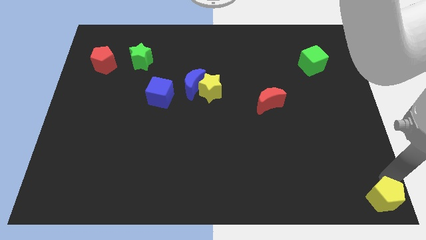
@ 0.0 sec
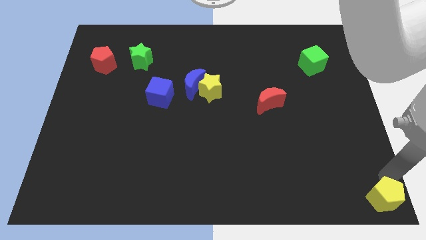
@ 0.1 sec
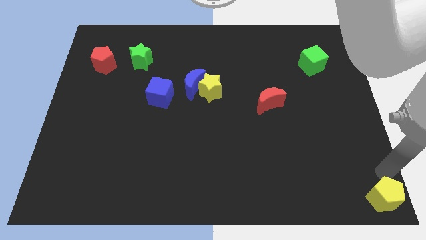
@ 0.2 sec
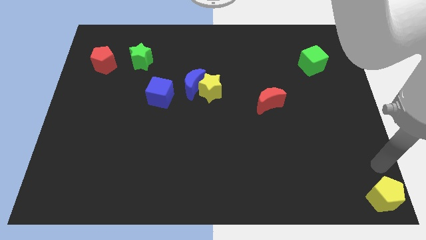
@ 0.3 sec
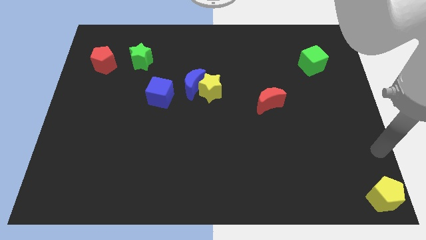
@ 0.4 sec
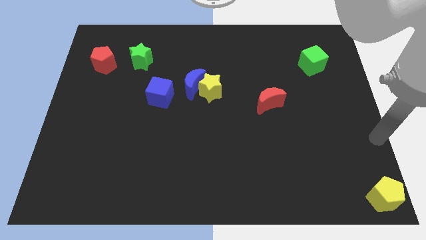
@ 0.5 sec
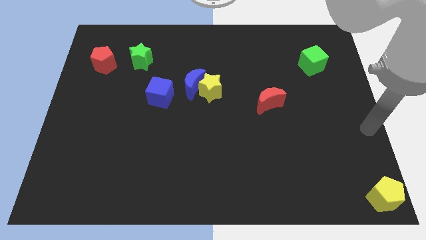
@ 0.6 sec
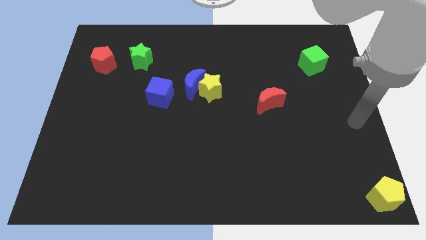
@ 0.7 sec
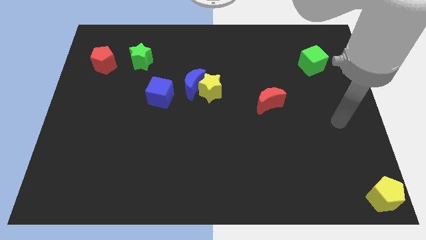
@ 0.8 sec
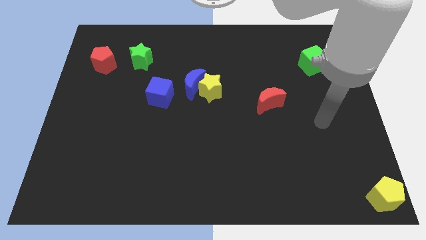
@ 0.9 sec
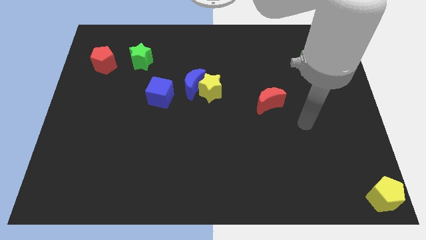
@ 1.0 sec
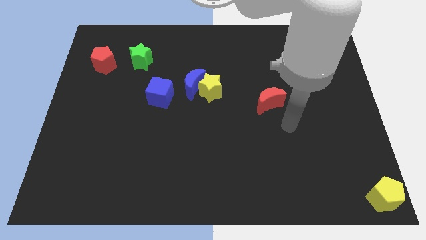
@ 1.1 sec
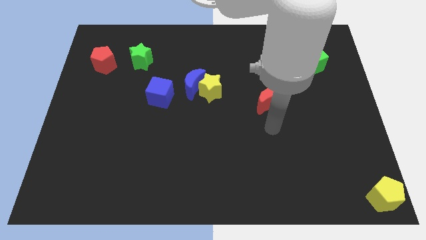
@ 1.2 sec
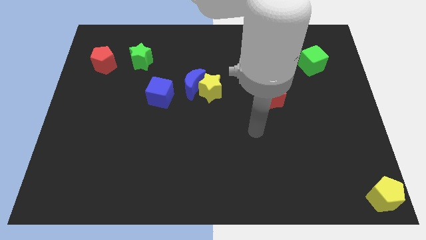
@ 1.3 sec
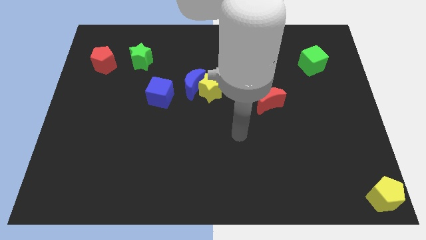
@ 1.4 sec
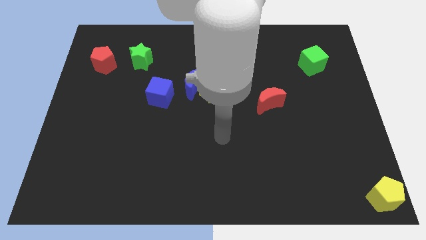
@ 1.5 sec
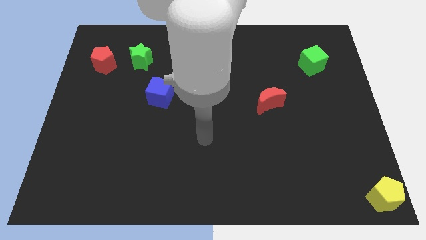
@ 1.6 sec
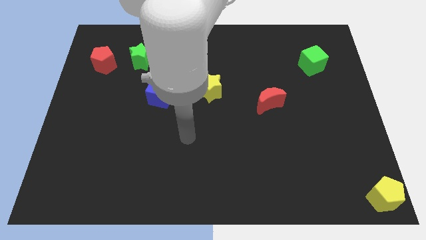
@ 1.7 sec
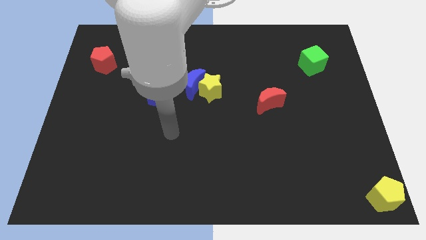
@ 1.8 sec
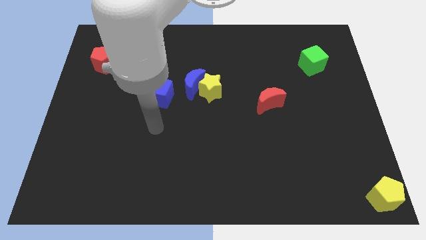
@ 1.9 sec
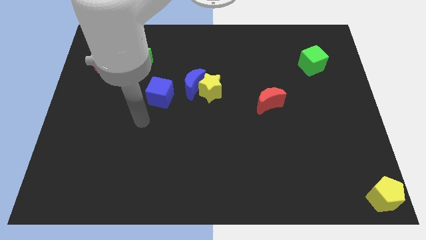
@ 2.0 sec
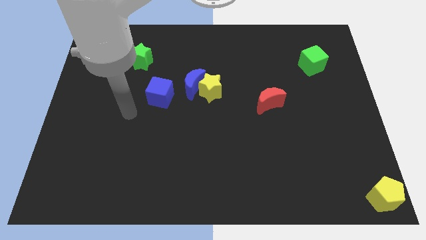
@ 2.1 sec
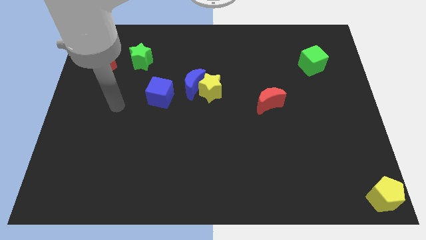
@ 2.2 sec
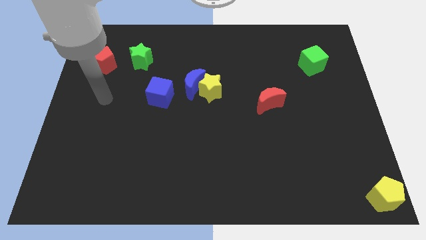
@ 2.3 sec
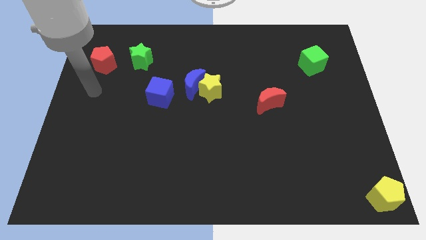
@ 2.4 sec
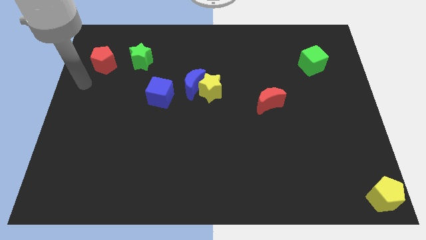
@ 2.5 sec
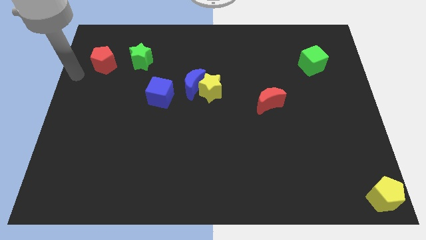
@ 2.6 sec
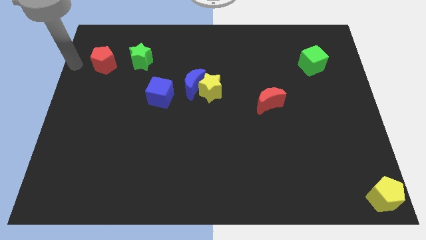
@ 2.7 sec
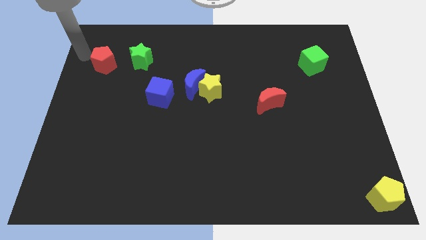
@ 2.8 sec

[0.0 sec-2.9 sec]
move your arm left to the red pentagon

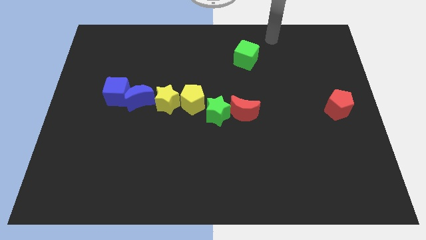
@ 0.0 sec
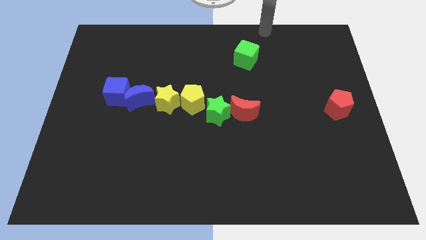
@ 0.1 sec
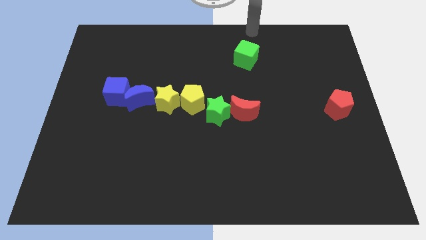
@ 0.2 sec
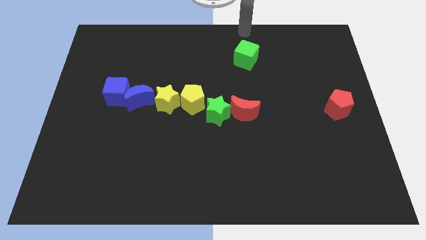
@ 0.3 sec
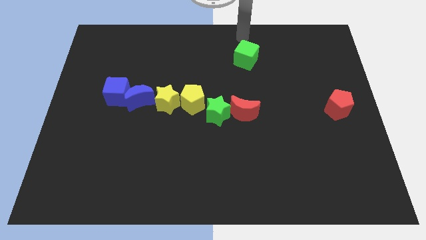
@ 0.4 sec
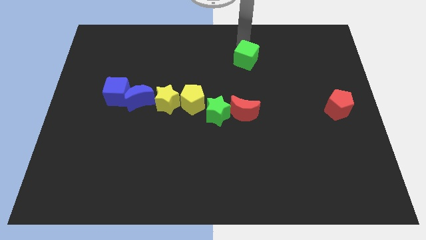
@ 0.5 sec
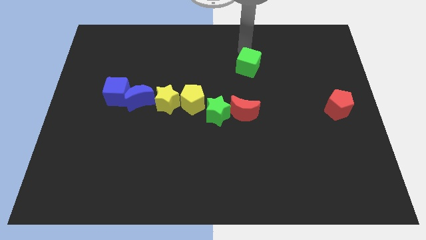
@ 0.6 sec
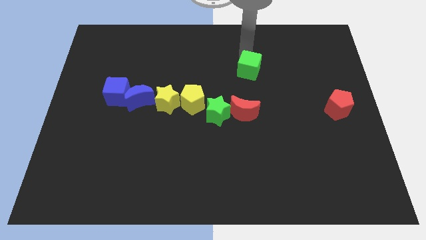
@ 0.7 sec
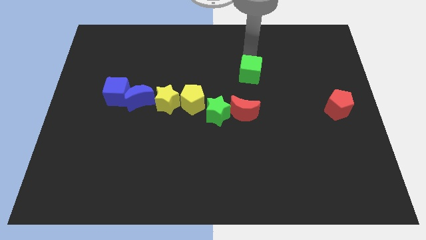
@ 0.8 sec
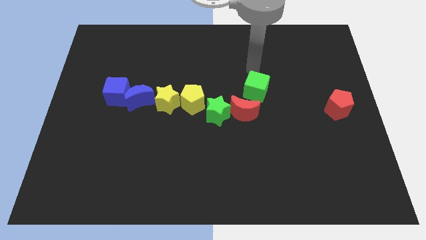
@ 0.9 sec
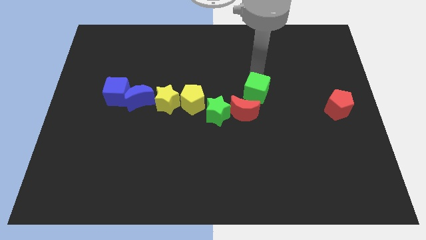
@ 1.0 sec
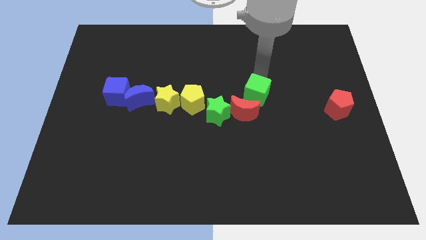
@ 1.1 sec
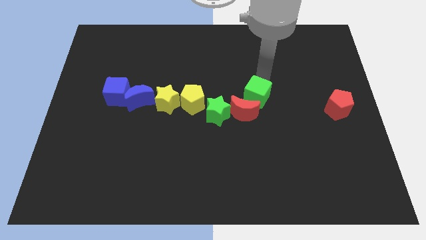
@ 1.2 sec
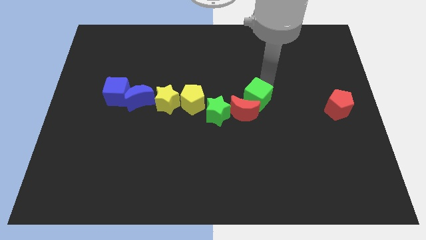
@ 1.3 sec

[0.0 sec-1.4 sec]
push the green cube into red crescent

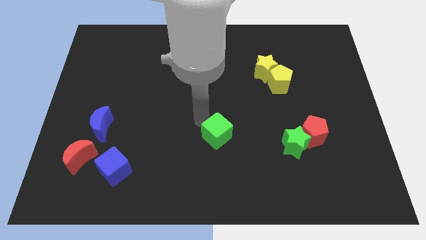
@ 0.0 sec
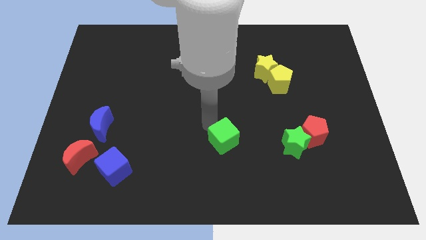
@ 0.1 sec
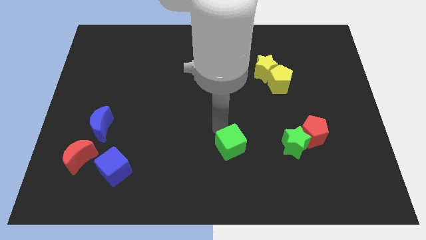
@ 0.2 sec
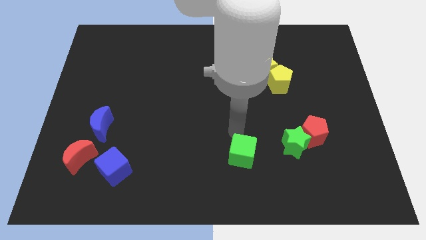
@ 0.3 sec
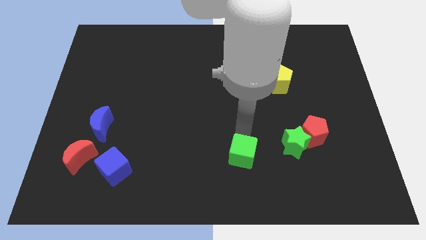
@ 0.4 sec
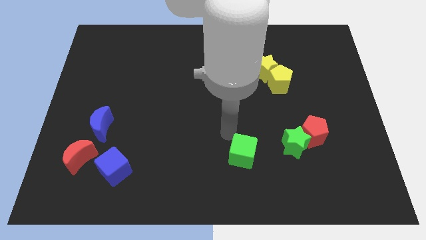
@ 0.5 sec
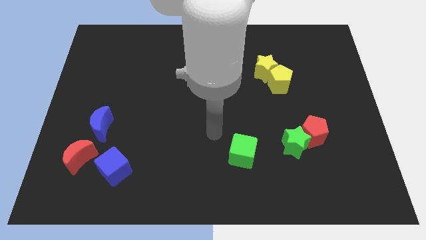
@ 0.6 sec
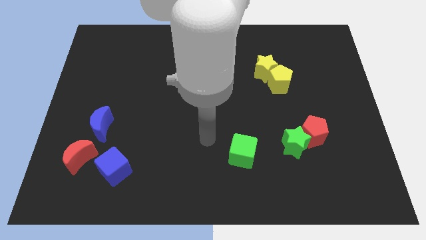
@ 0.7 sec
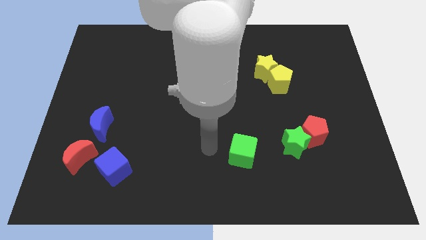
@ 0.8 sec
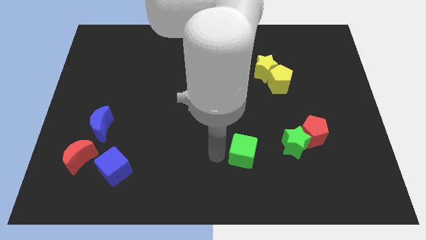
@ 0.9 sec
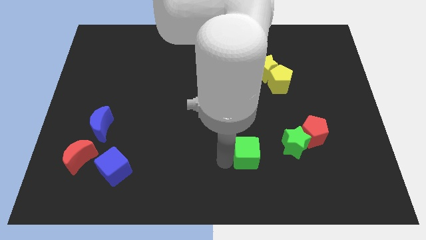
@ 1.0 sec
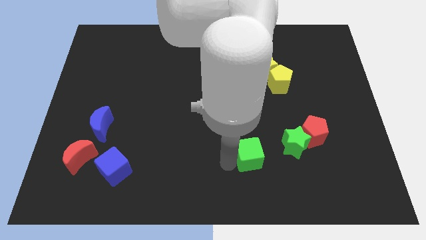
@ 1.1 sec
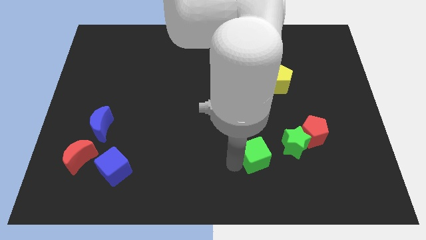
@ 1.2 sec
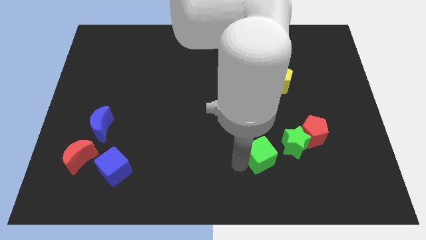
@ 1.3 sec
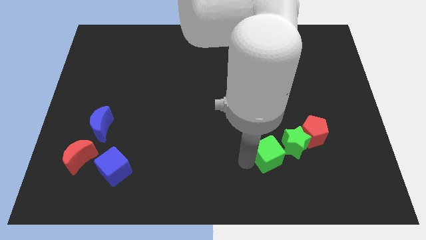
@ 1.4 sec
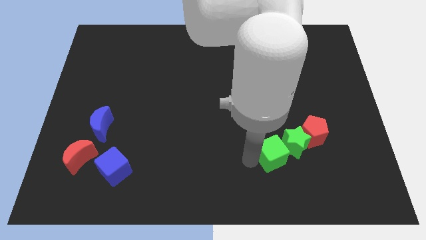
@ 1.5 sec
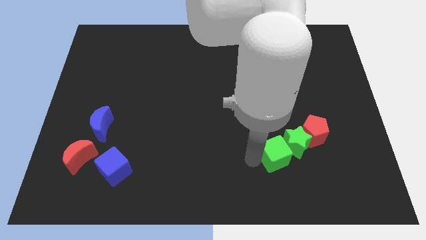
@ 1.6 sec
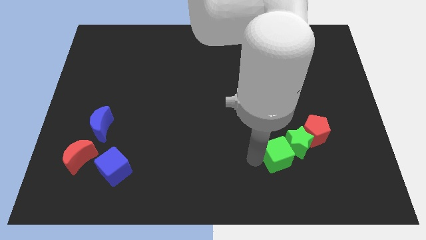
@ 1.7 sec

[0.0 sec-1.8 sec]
push the green cube into green star

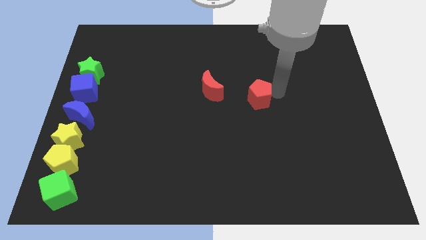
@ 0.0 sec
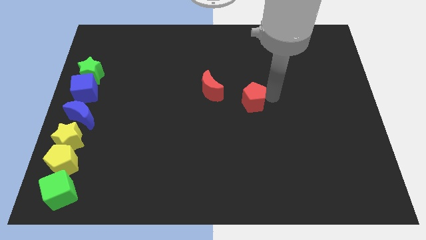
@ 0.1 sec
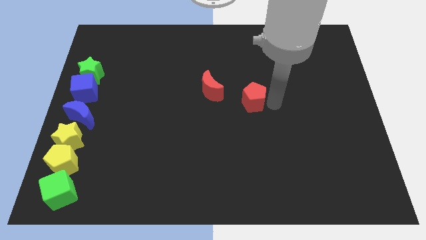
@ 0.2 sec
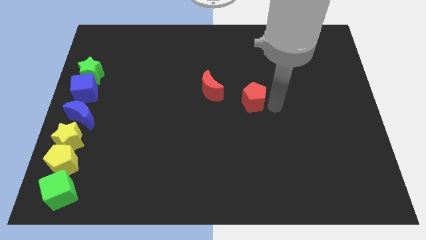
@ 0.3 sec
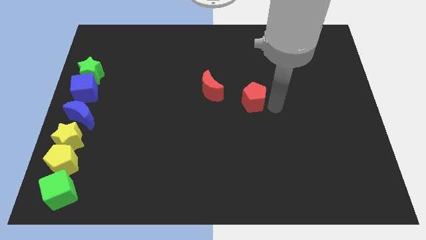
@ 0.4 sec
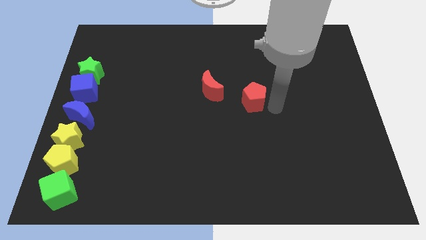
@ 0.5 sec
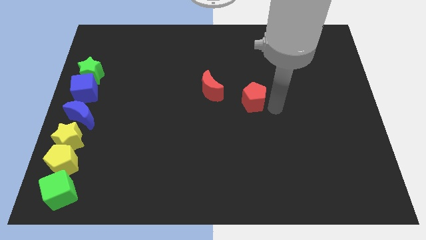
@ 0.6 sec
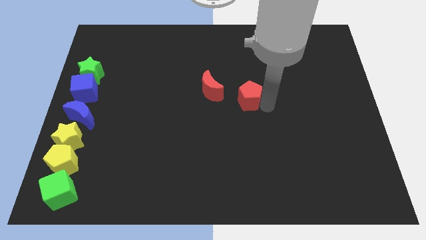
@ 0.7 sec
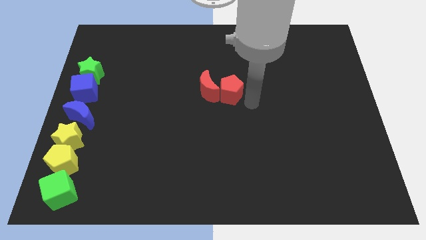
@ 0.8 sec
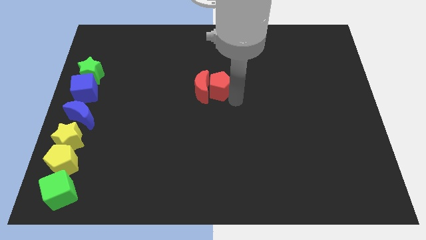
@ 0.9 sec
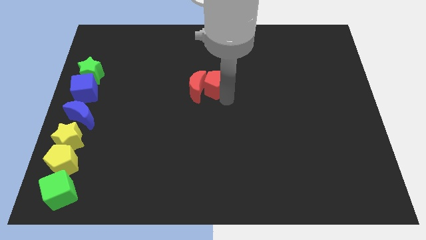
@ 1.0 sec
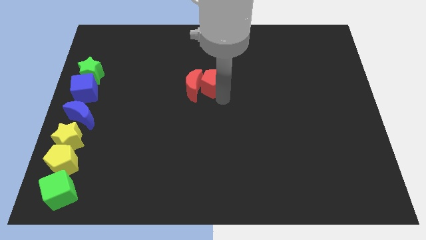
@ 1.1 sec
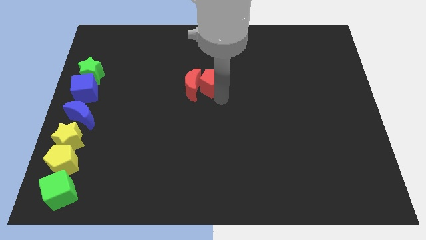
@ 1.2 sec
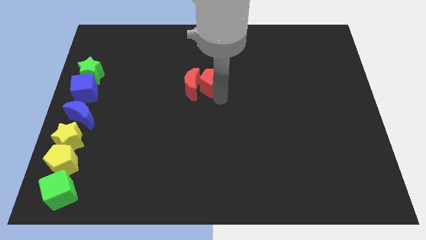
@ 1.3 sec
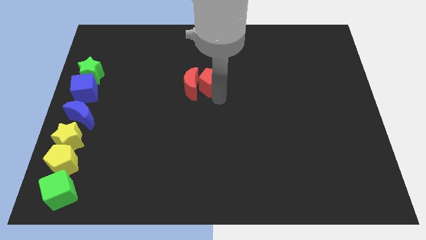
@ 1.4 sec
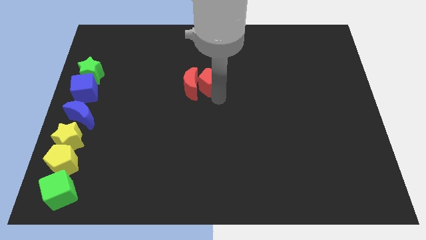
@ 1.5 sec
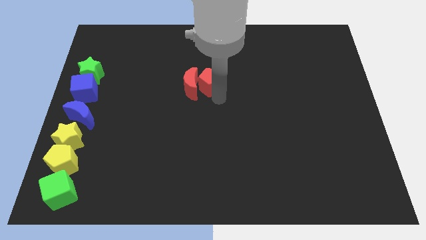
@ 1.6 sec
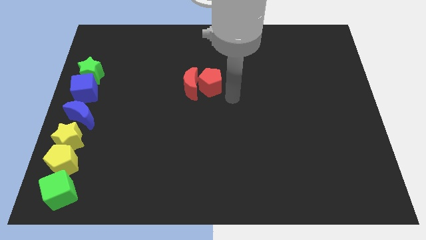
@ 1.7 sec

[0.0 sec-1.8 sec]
push the red pentagon into the red crescent

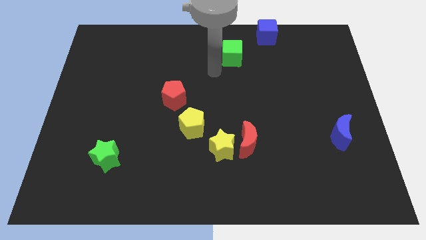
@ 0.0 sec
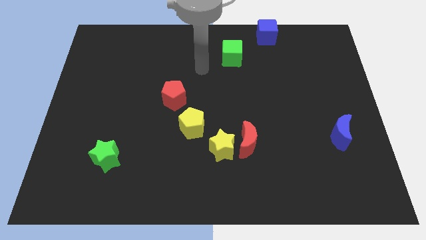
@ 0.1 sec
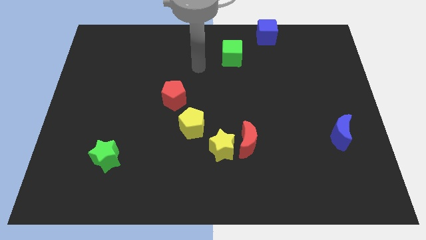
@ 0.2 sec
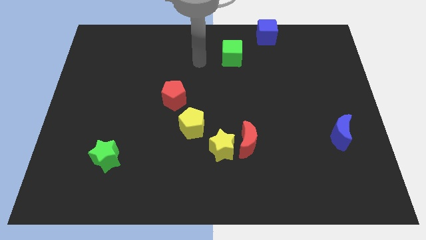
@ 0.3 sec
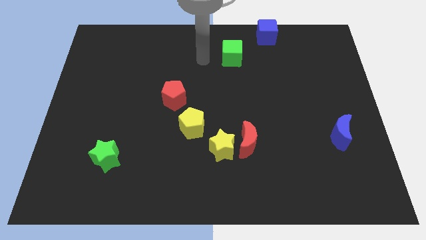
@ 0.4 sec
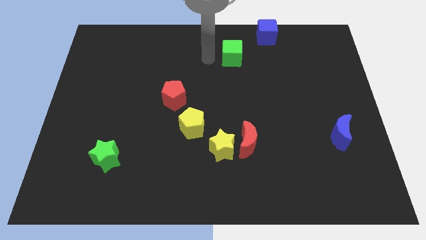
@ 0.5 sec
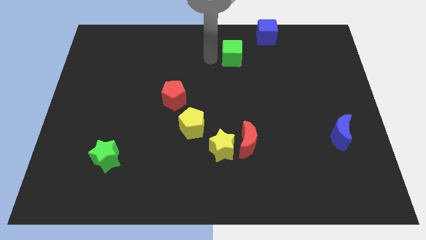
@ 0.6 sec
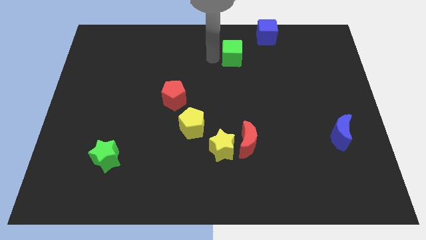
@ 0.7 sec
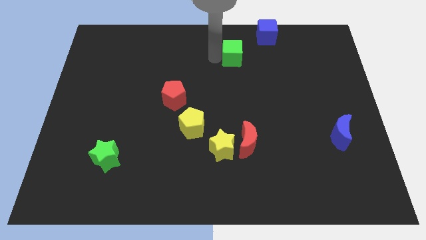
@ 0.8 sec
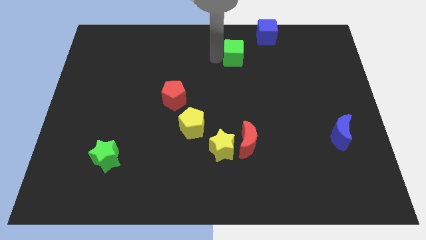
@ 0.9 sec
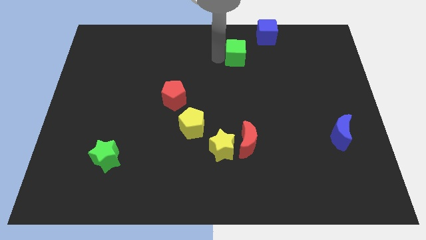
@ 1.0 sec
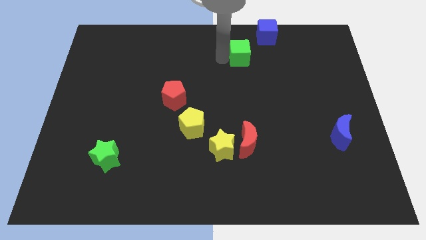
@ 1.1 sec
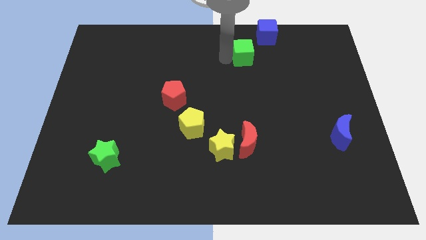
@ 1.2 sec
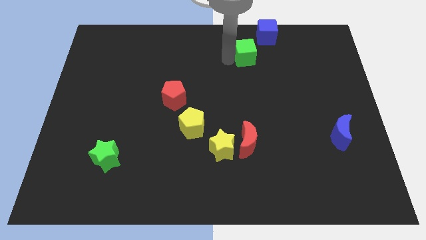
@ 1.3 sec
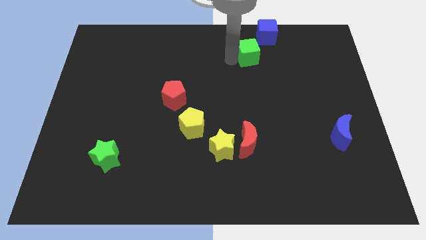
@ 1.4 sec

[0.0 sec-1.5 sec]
move the green cube to the bottom left of the blue cube
